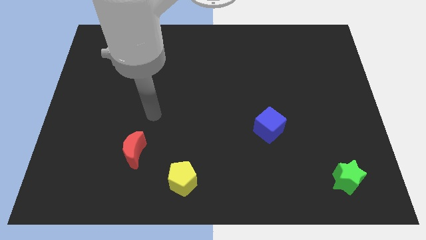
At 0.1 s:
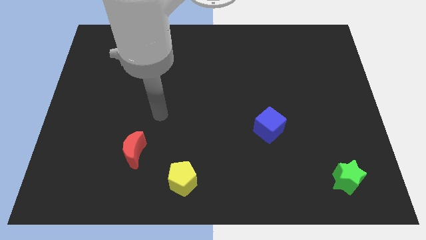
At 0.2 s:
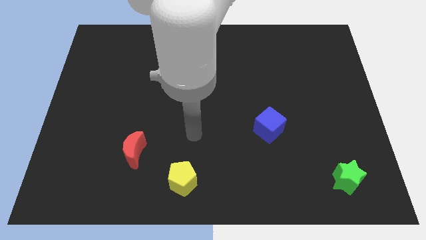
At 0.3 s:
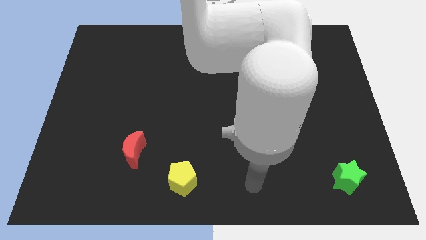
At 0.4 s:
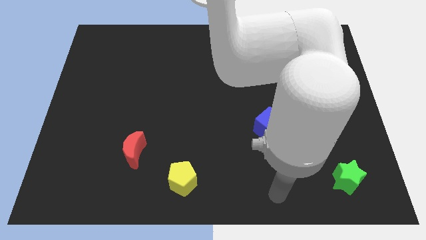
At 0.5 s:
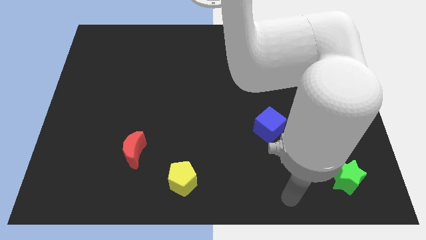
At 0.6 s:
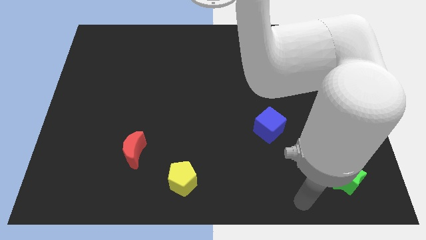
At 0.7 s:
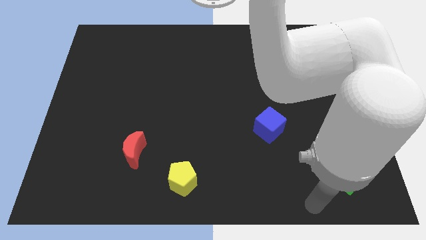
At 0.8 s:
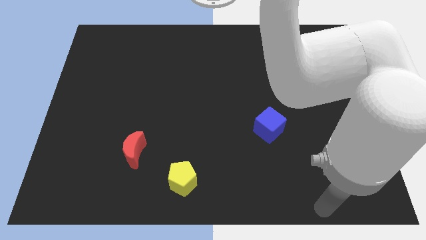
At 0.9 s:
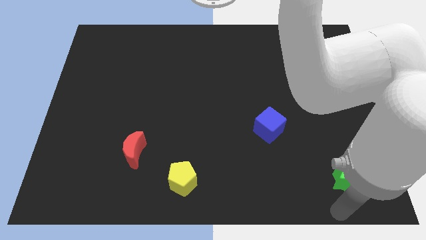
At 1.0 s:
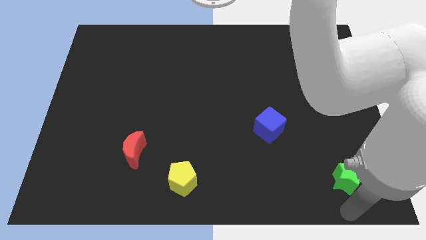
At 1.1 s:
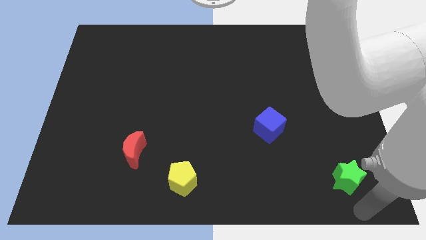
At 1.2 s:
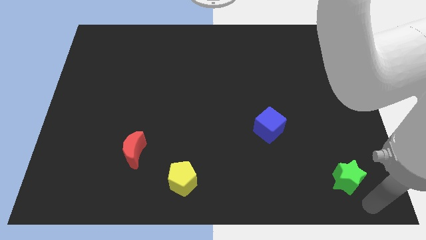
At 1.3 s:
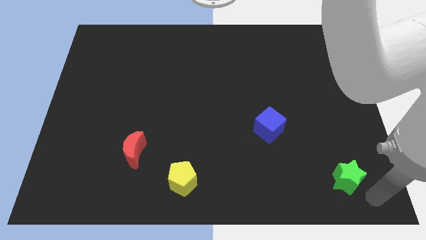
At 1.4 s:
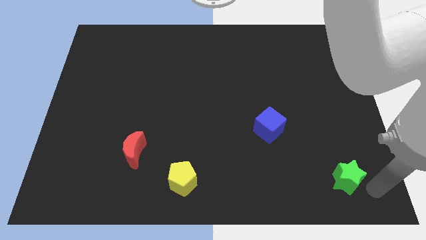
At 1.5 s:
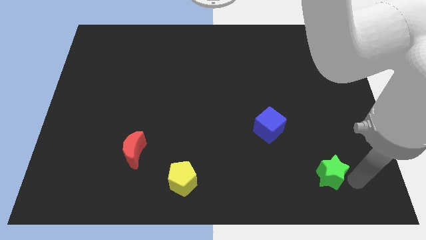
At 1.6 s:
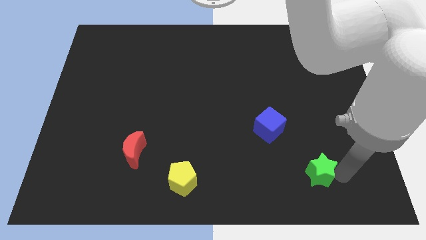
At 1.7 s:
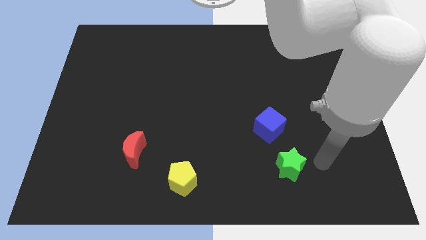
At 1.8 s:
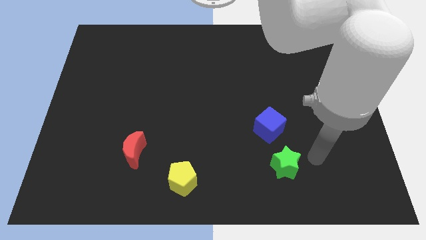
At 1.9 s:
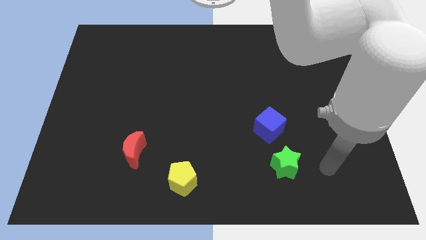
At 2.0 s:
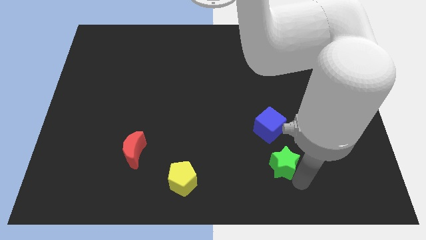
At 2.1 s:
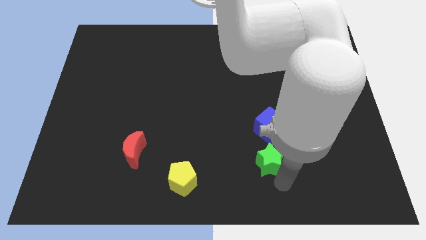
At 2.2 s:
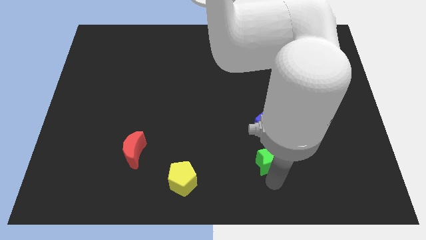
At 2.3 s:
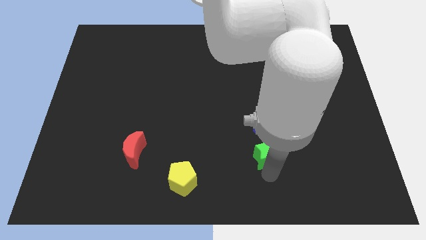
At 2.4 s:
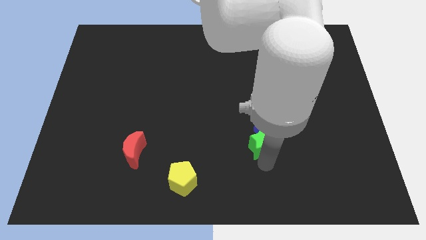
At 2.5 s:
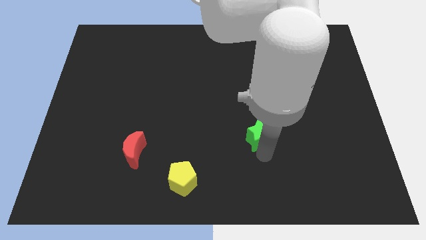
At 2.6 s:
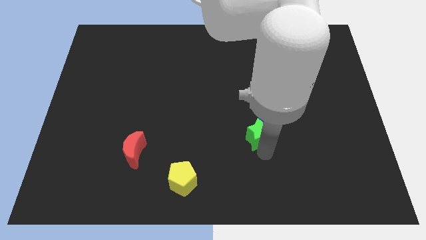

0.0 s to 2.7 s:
move the green star close to the blue cube

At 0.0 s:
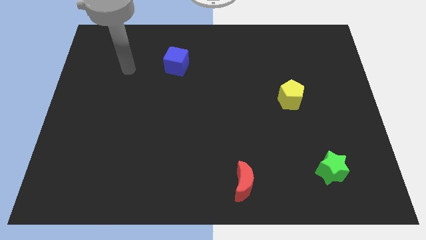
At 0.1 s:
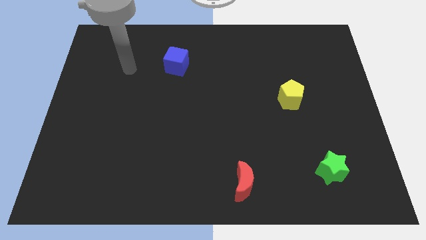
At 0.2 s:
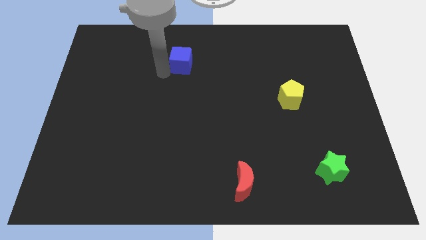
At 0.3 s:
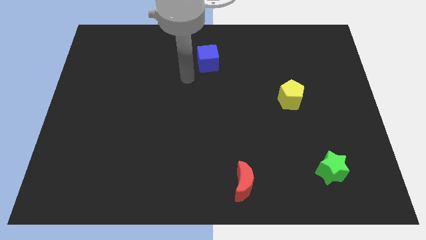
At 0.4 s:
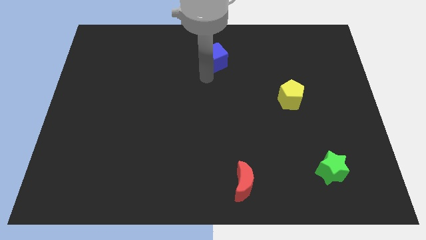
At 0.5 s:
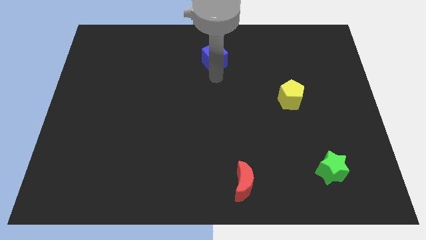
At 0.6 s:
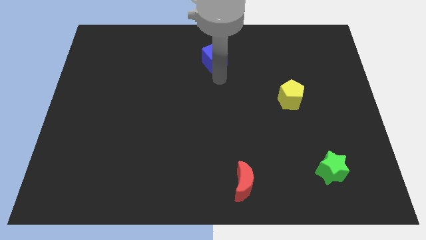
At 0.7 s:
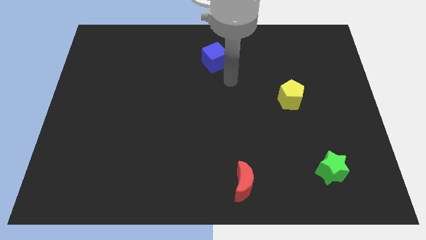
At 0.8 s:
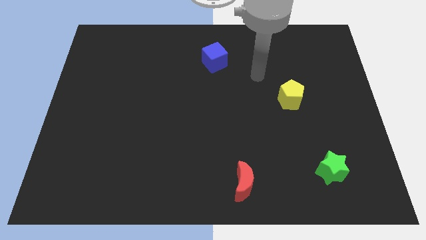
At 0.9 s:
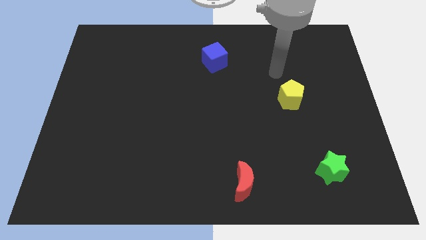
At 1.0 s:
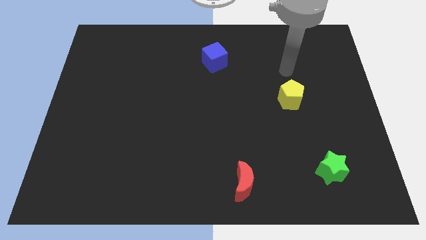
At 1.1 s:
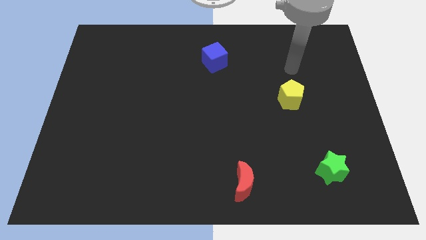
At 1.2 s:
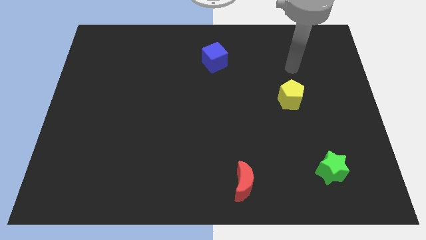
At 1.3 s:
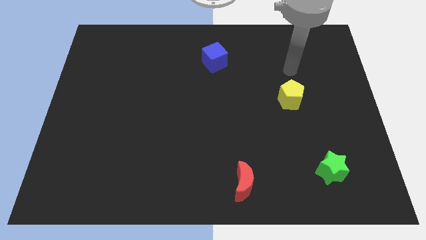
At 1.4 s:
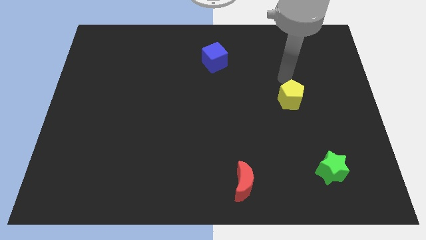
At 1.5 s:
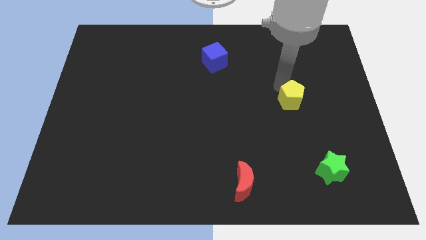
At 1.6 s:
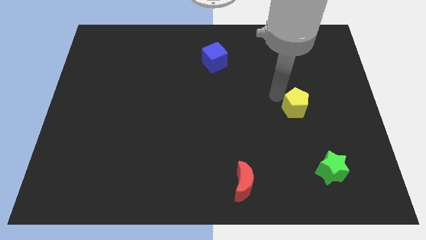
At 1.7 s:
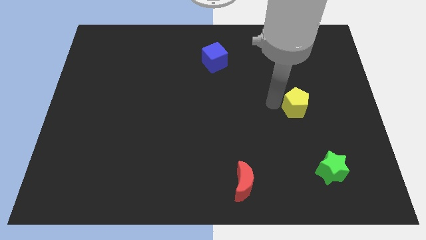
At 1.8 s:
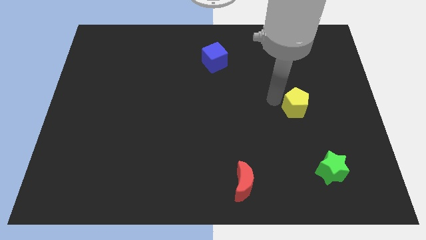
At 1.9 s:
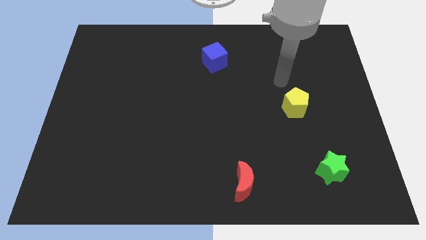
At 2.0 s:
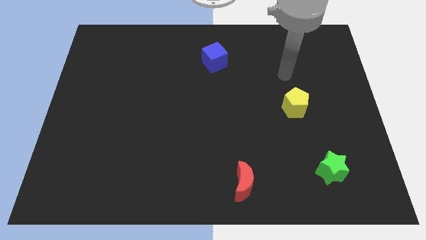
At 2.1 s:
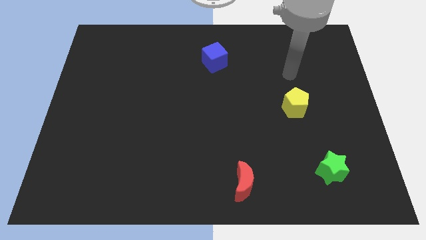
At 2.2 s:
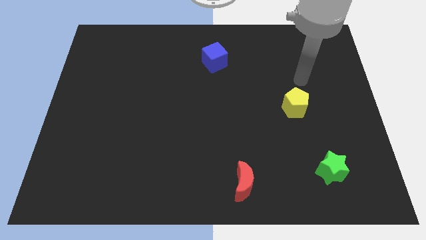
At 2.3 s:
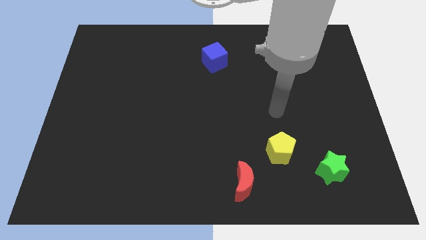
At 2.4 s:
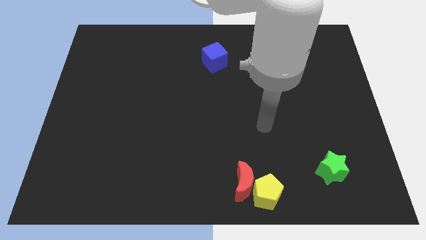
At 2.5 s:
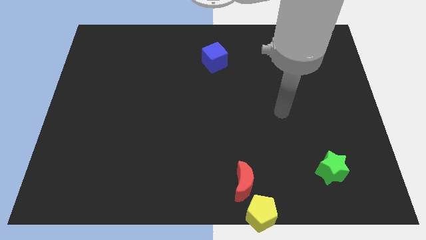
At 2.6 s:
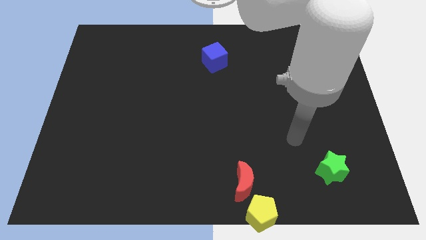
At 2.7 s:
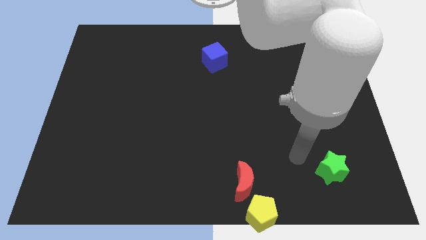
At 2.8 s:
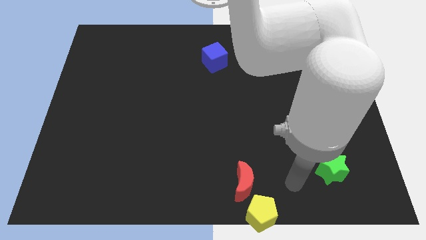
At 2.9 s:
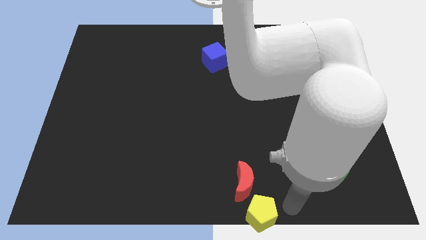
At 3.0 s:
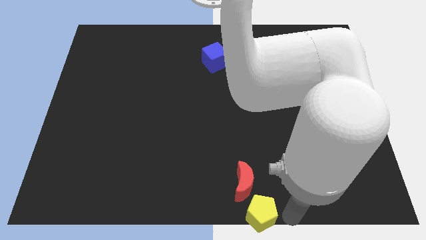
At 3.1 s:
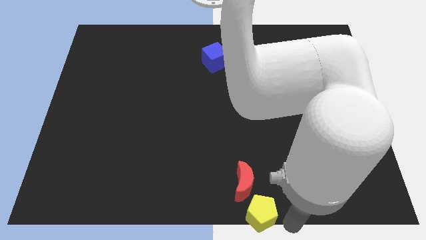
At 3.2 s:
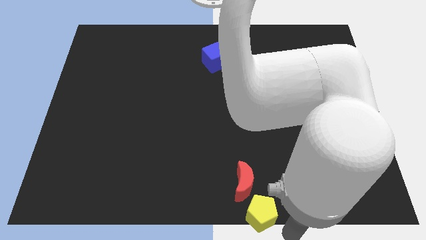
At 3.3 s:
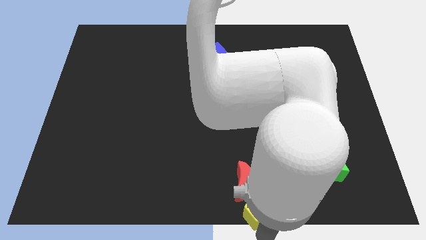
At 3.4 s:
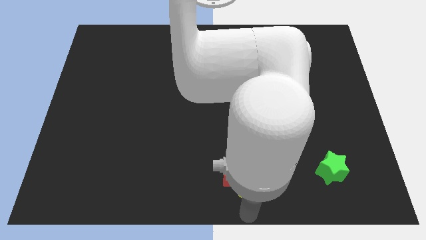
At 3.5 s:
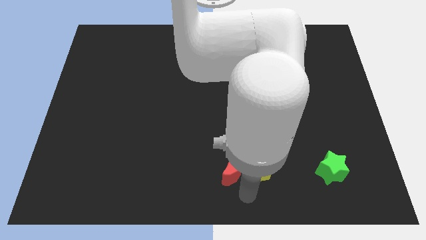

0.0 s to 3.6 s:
slide the pentagon next to the red block

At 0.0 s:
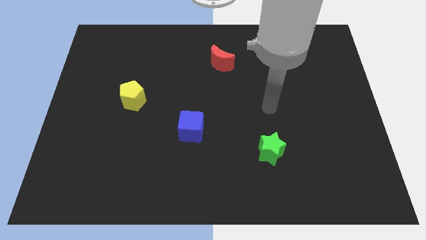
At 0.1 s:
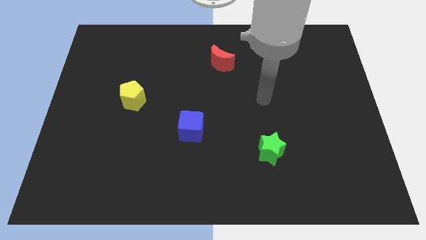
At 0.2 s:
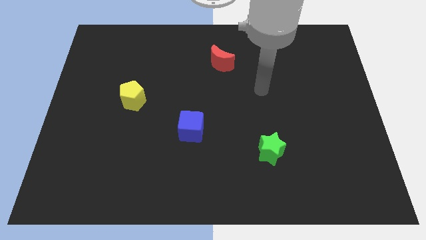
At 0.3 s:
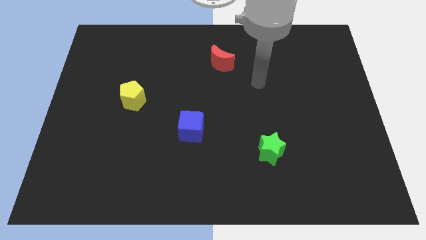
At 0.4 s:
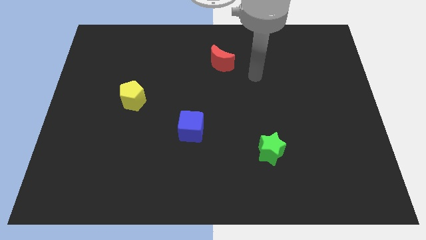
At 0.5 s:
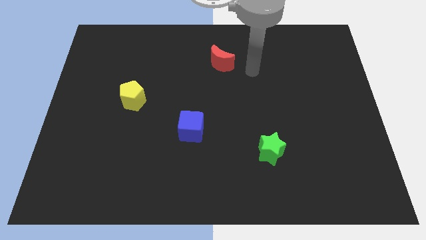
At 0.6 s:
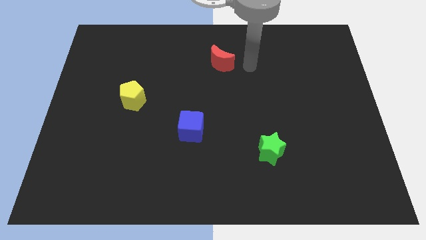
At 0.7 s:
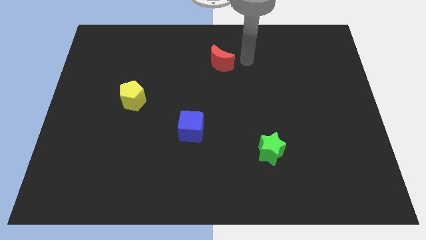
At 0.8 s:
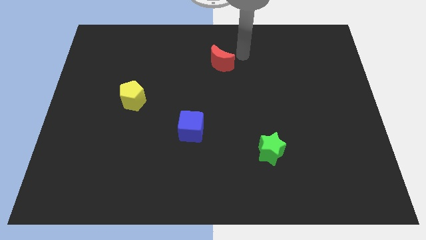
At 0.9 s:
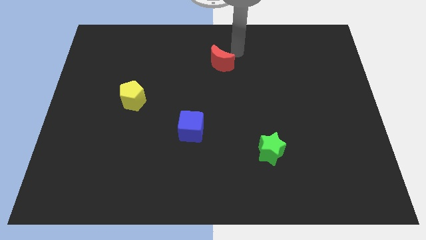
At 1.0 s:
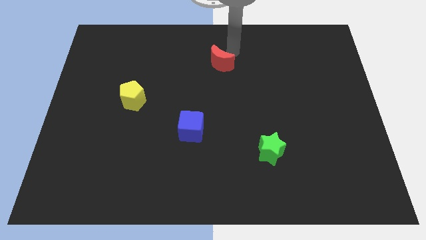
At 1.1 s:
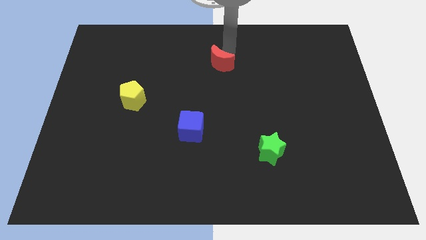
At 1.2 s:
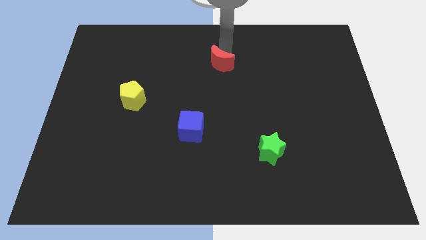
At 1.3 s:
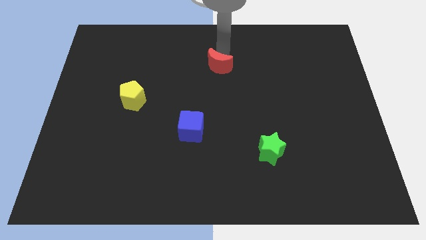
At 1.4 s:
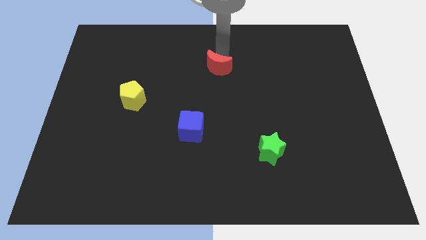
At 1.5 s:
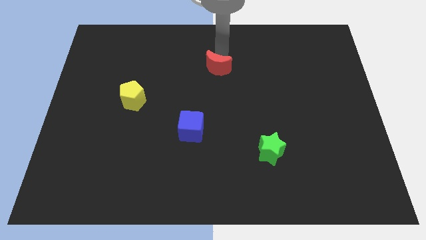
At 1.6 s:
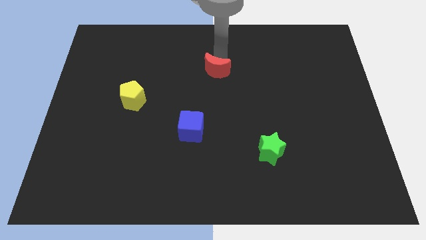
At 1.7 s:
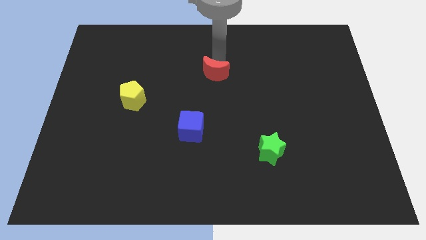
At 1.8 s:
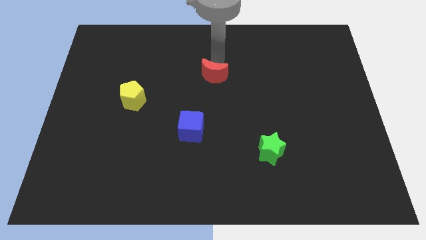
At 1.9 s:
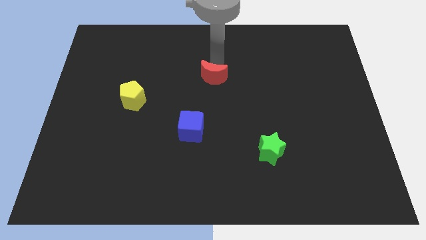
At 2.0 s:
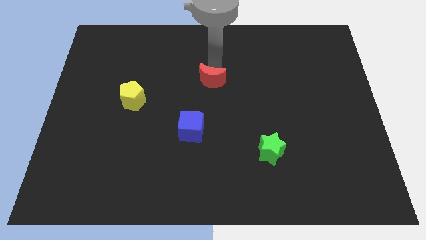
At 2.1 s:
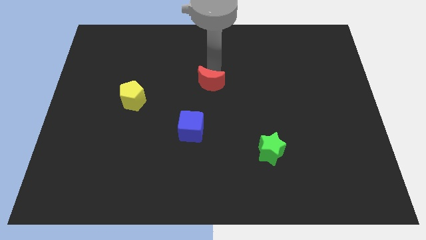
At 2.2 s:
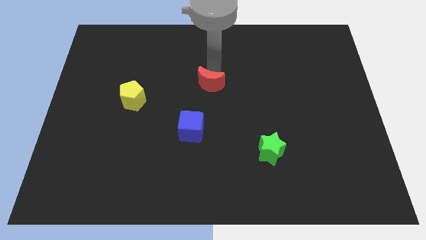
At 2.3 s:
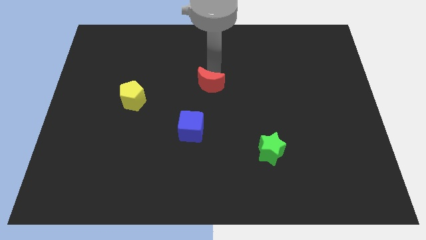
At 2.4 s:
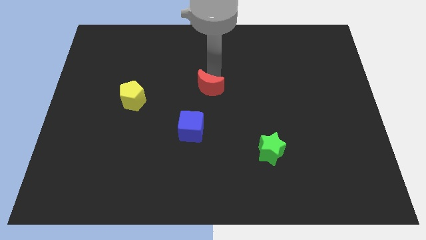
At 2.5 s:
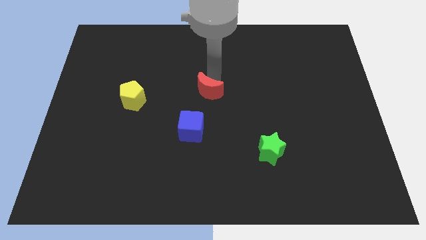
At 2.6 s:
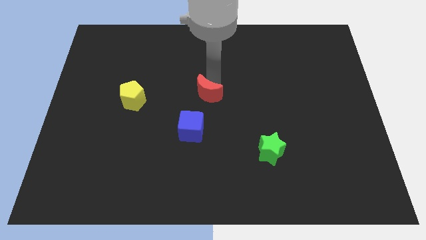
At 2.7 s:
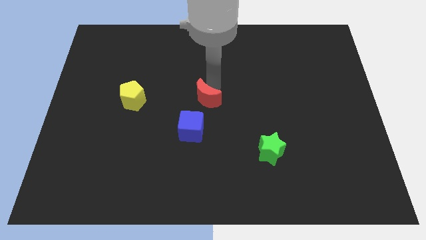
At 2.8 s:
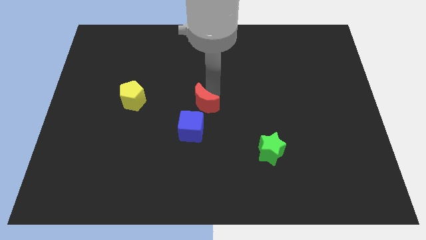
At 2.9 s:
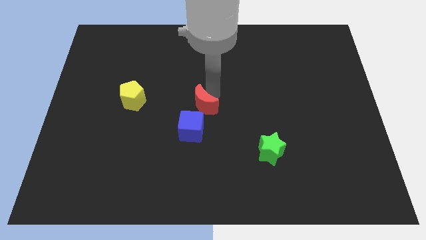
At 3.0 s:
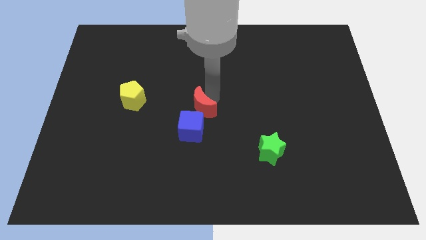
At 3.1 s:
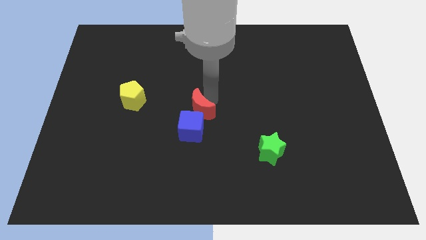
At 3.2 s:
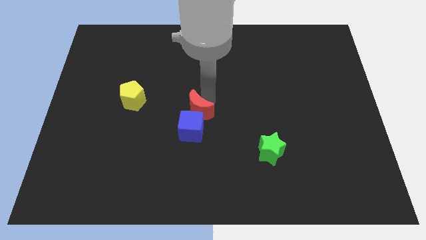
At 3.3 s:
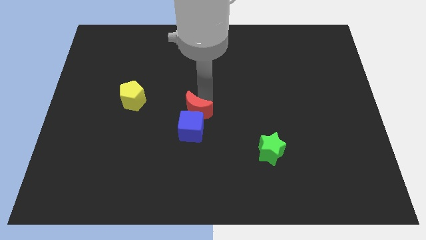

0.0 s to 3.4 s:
put the moon towards the blue cube
